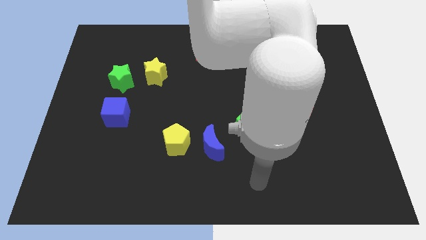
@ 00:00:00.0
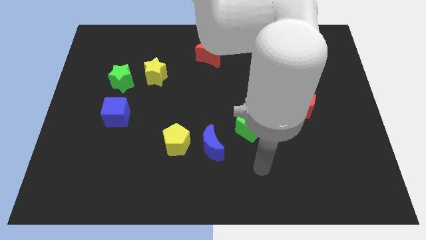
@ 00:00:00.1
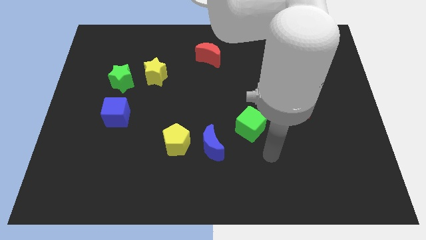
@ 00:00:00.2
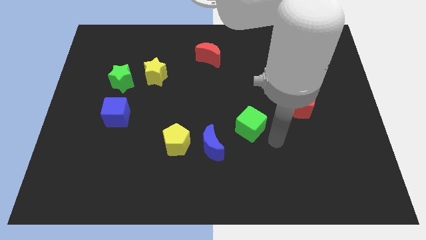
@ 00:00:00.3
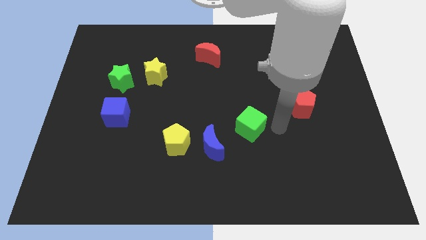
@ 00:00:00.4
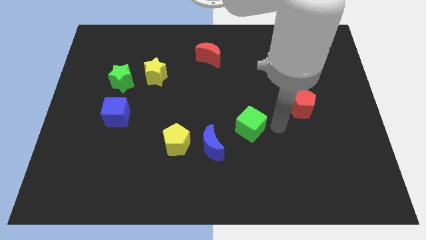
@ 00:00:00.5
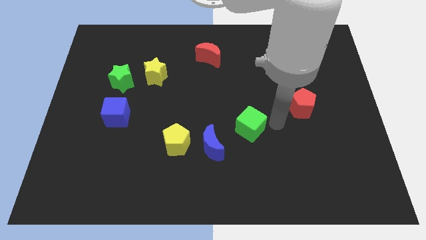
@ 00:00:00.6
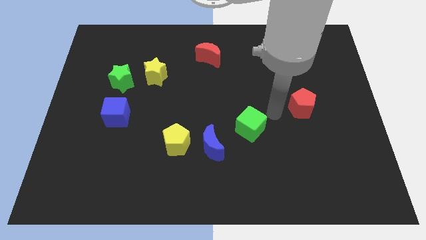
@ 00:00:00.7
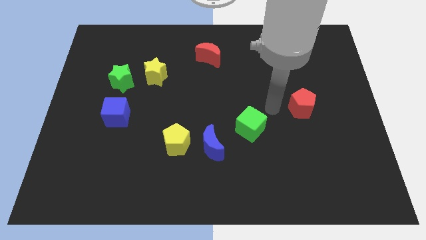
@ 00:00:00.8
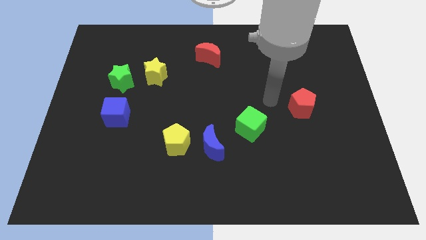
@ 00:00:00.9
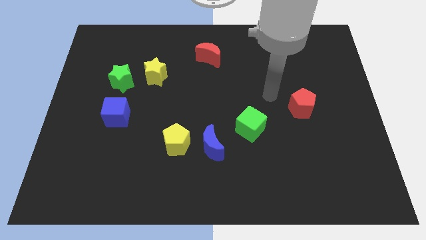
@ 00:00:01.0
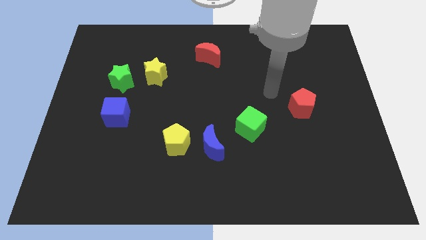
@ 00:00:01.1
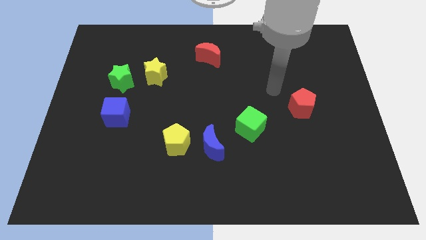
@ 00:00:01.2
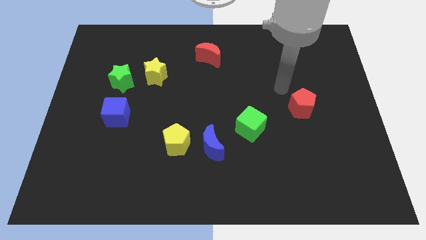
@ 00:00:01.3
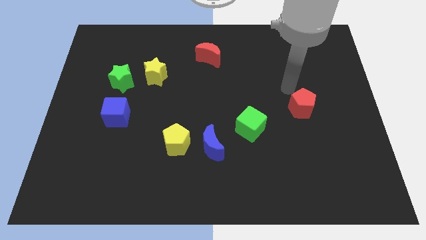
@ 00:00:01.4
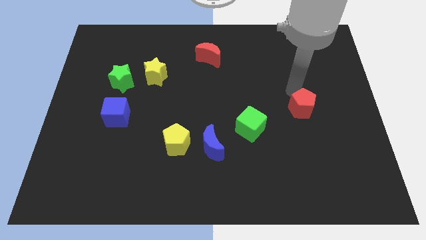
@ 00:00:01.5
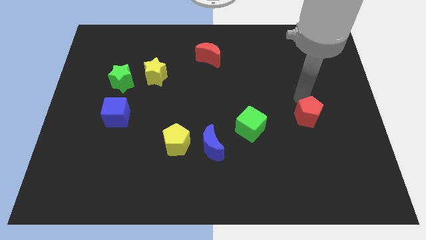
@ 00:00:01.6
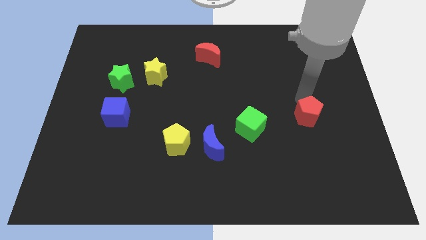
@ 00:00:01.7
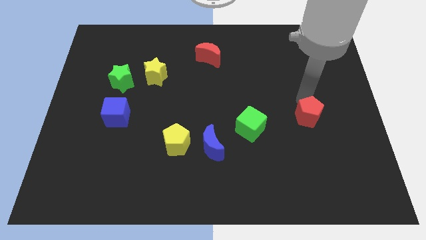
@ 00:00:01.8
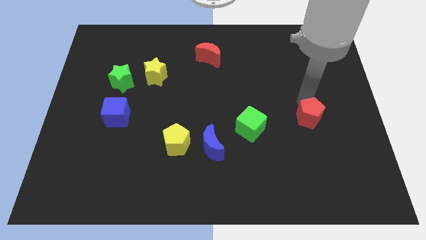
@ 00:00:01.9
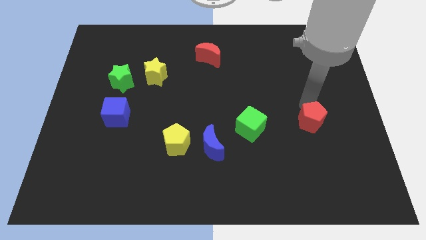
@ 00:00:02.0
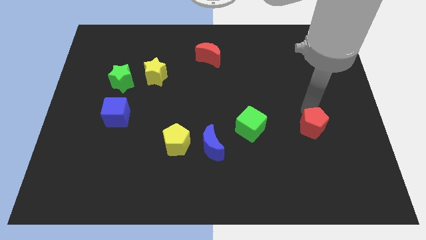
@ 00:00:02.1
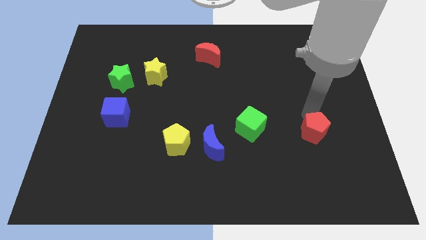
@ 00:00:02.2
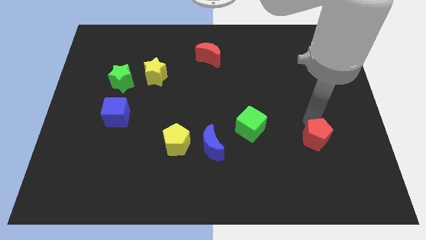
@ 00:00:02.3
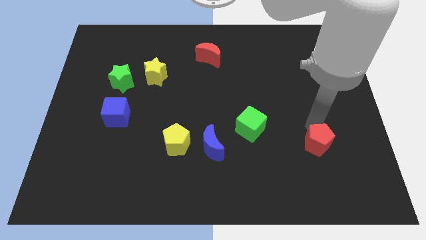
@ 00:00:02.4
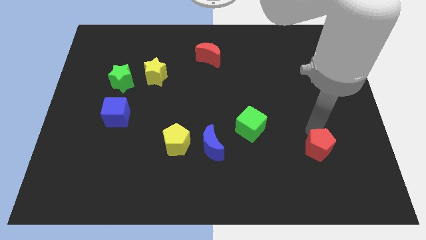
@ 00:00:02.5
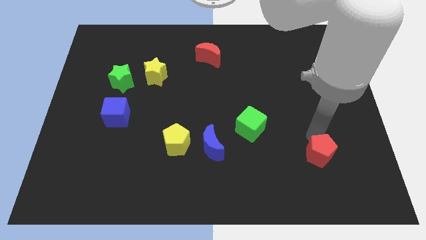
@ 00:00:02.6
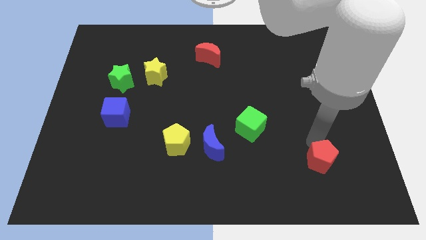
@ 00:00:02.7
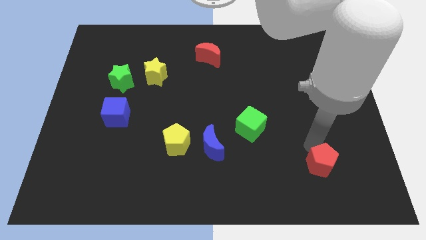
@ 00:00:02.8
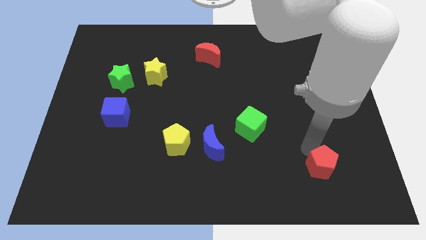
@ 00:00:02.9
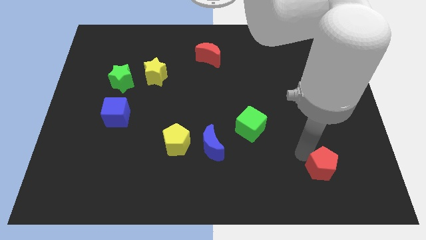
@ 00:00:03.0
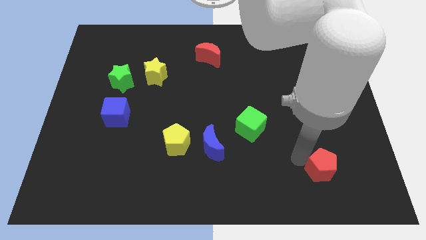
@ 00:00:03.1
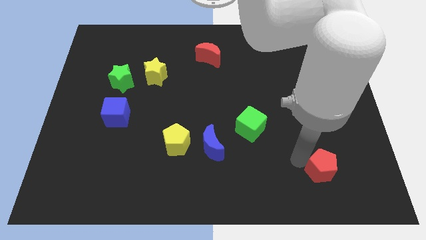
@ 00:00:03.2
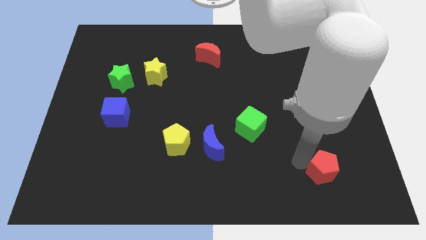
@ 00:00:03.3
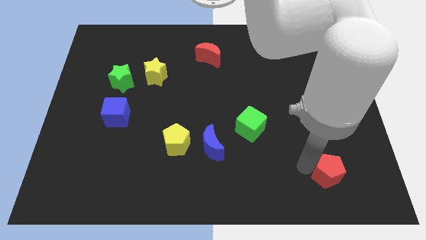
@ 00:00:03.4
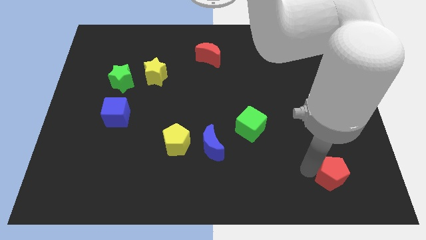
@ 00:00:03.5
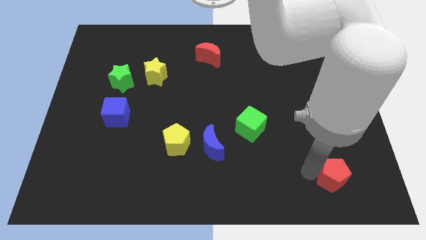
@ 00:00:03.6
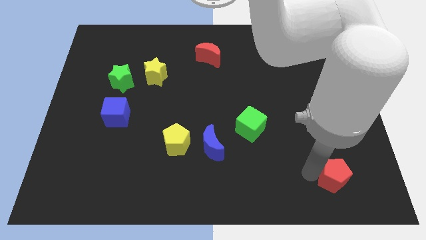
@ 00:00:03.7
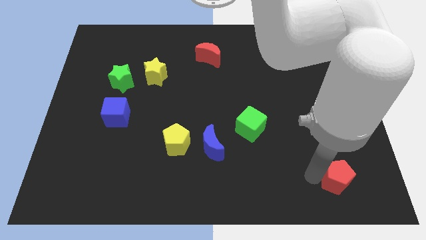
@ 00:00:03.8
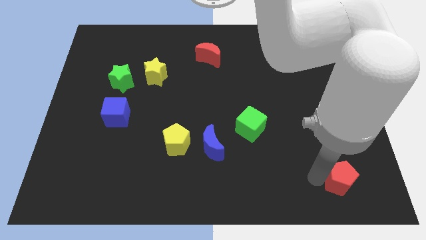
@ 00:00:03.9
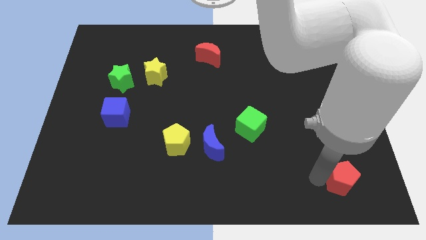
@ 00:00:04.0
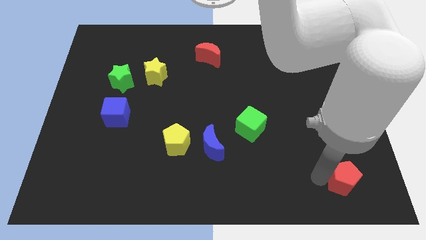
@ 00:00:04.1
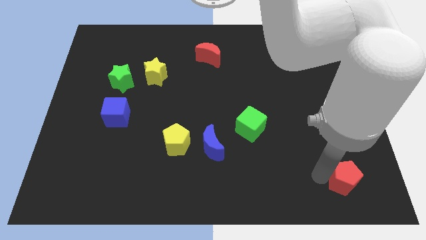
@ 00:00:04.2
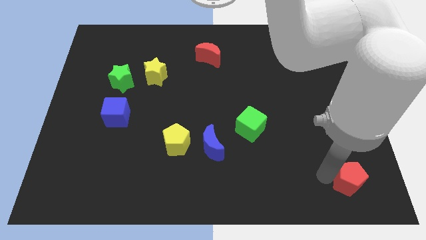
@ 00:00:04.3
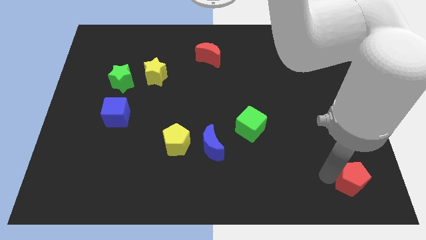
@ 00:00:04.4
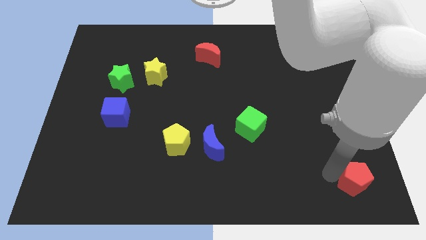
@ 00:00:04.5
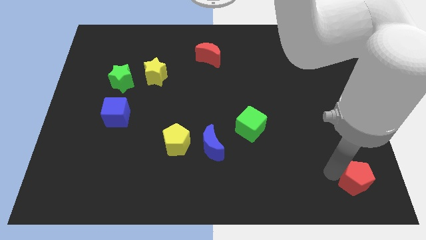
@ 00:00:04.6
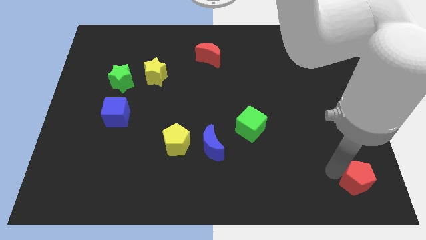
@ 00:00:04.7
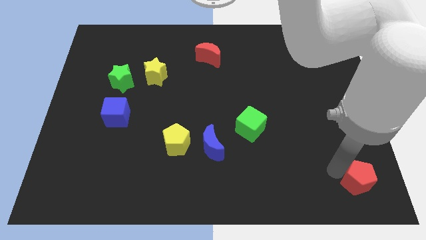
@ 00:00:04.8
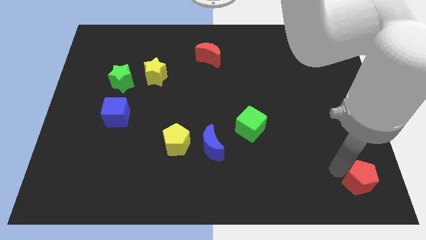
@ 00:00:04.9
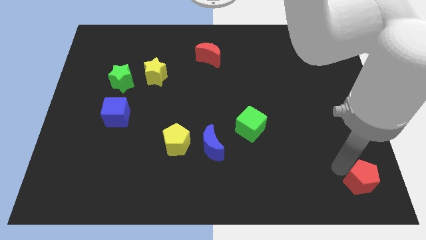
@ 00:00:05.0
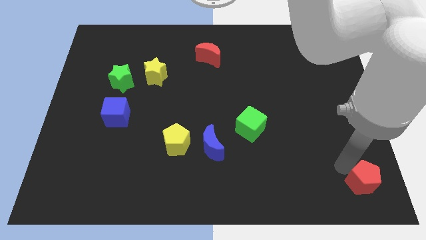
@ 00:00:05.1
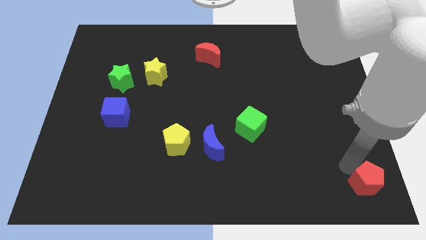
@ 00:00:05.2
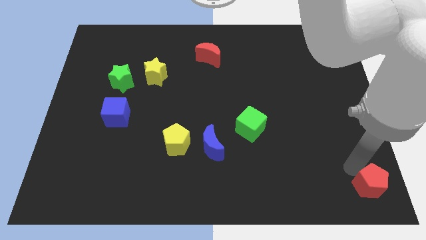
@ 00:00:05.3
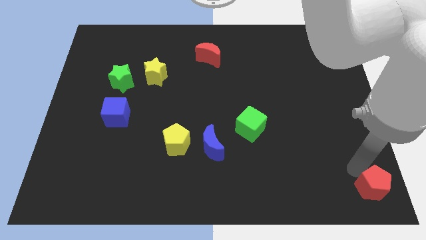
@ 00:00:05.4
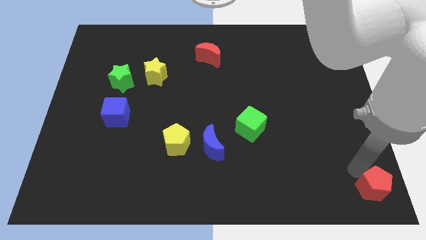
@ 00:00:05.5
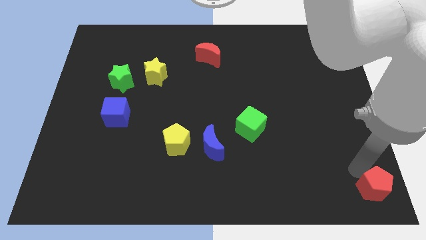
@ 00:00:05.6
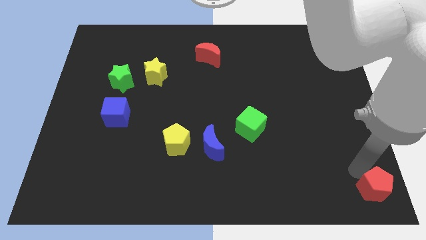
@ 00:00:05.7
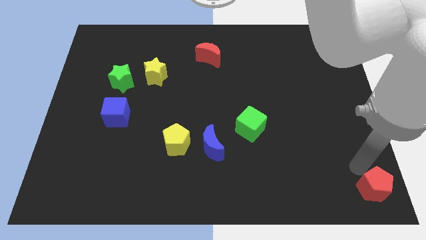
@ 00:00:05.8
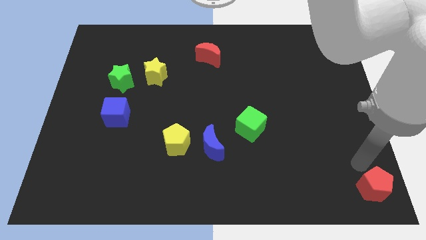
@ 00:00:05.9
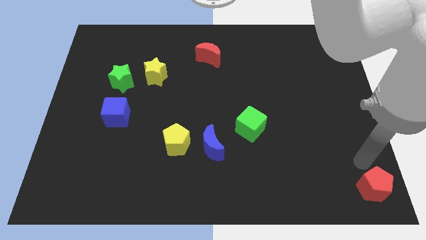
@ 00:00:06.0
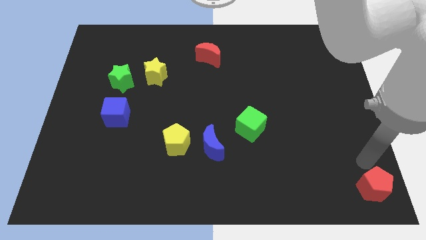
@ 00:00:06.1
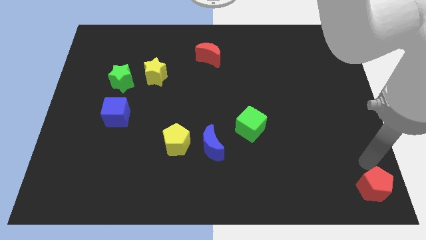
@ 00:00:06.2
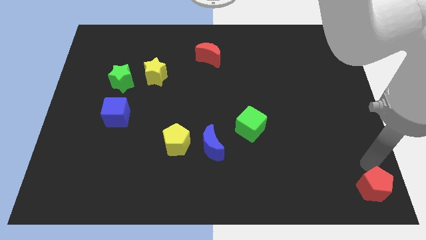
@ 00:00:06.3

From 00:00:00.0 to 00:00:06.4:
move the red pentagon towards the right bottom corner of the board

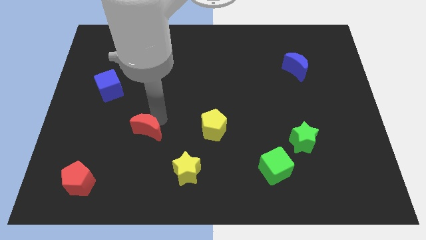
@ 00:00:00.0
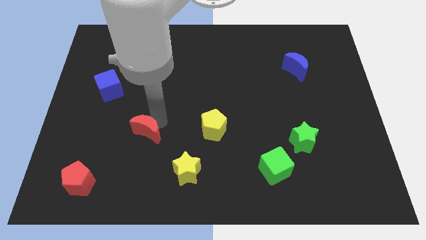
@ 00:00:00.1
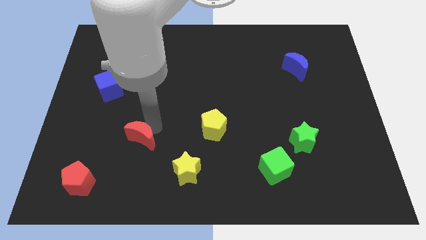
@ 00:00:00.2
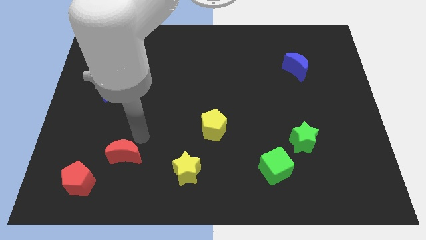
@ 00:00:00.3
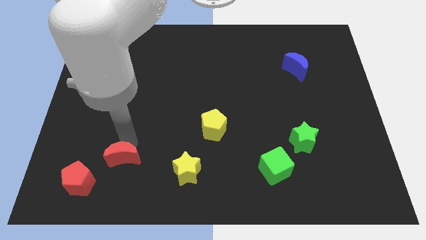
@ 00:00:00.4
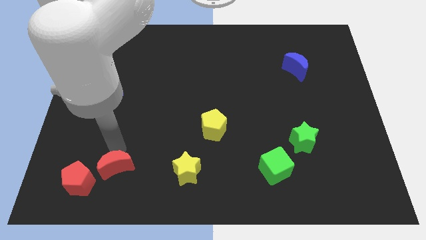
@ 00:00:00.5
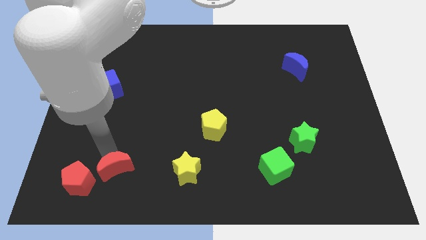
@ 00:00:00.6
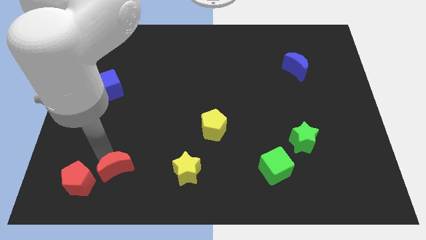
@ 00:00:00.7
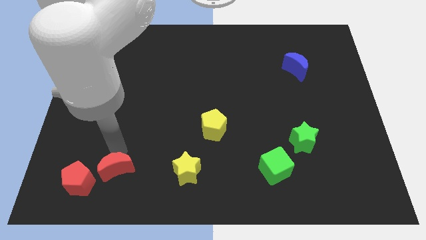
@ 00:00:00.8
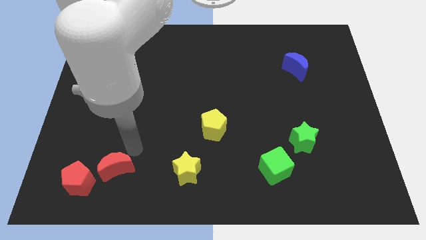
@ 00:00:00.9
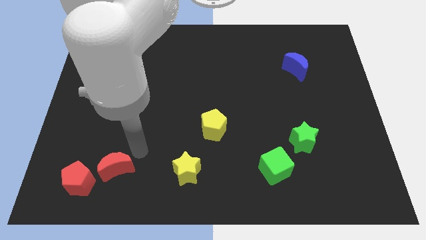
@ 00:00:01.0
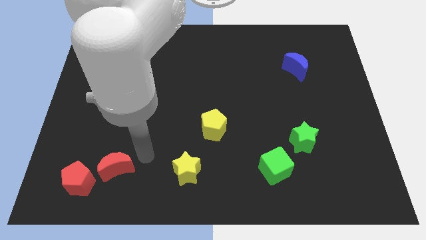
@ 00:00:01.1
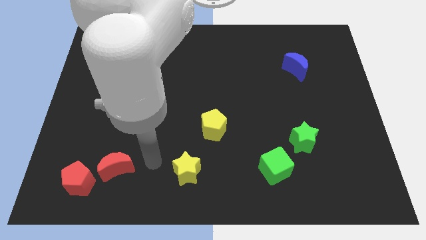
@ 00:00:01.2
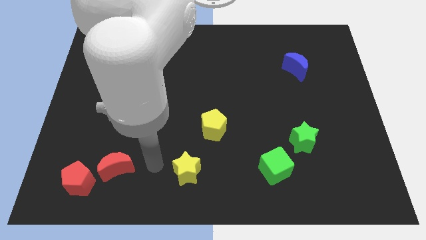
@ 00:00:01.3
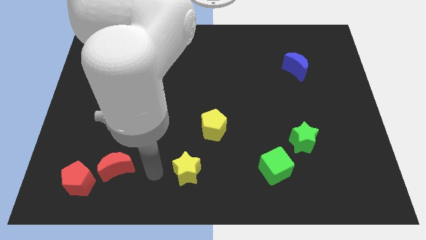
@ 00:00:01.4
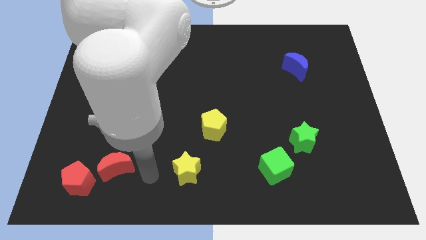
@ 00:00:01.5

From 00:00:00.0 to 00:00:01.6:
slide red crescent towards red pentagon

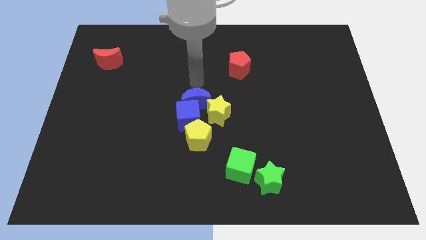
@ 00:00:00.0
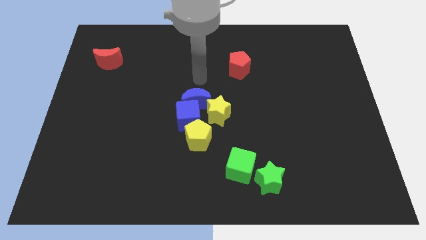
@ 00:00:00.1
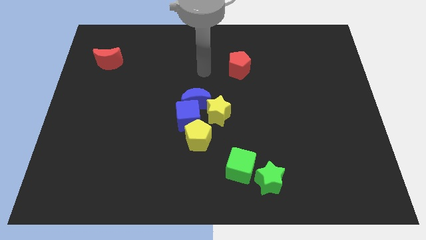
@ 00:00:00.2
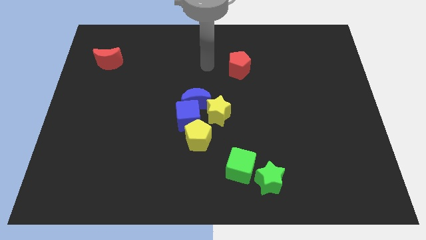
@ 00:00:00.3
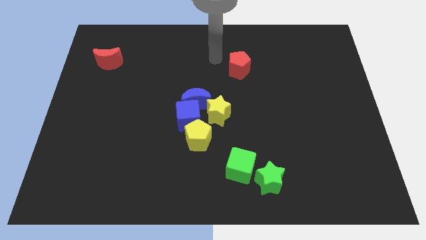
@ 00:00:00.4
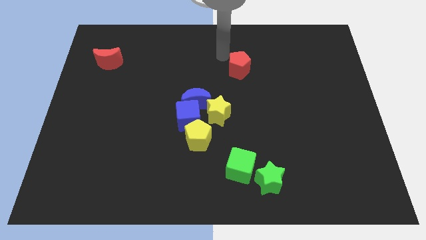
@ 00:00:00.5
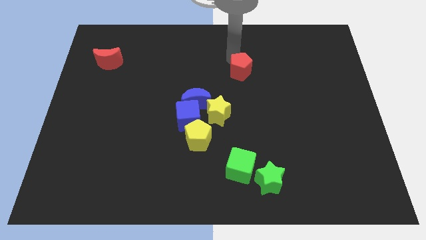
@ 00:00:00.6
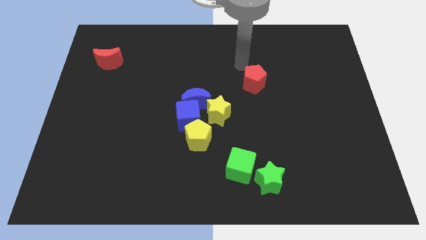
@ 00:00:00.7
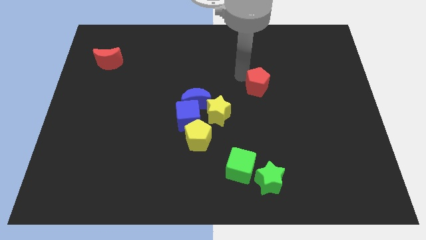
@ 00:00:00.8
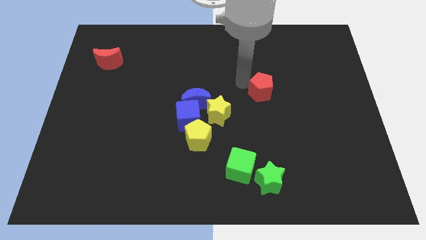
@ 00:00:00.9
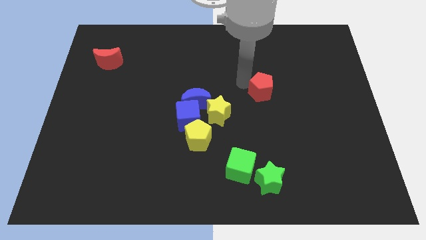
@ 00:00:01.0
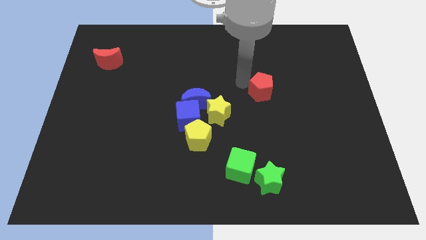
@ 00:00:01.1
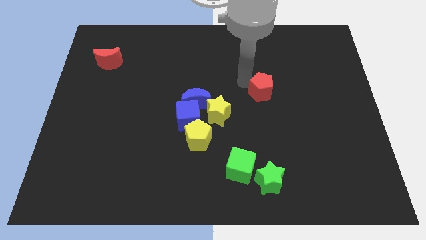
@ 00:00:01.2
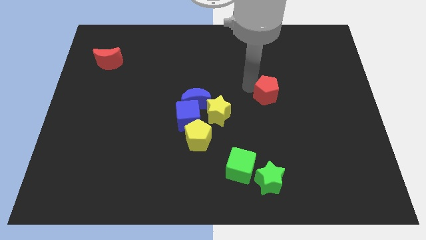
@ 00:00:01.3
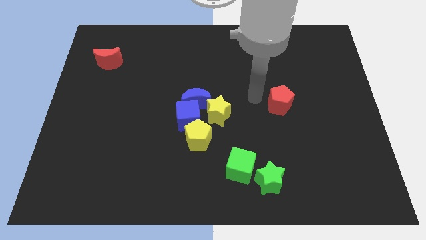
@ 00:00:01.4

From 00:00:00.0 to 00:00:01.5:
move the red pentagon vertically above the green star
